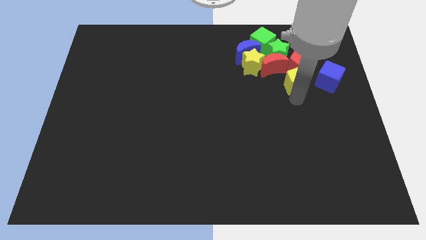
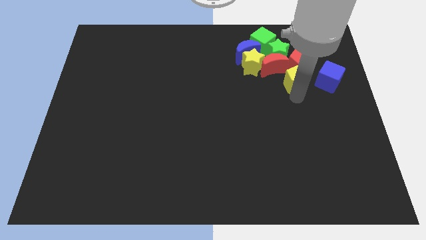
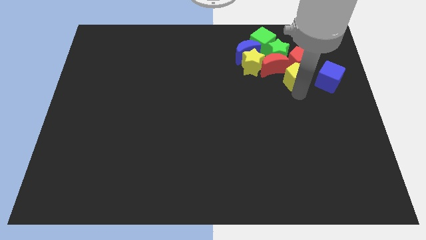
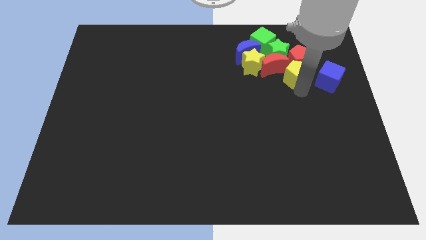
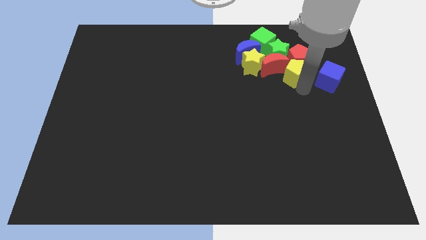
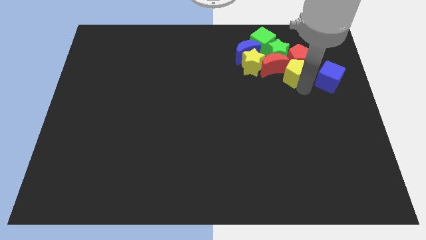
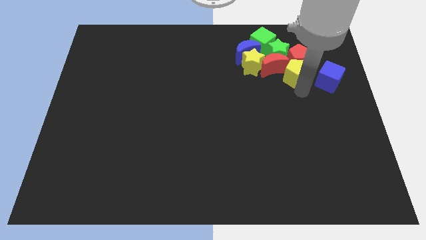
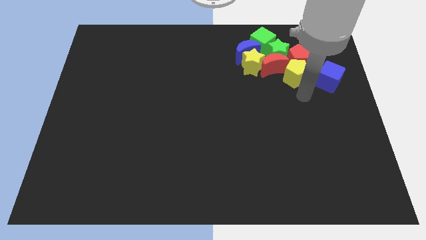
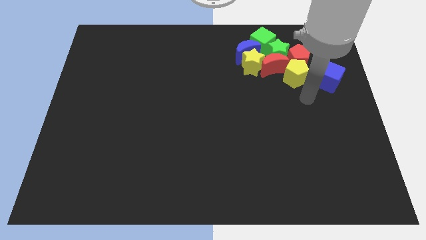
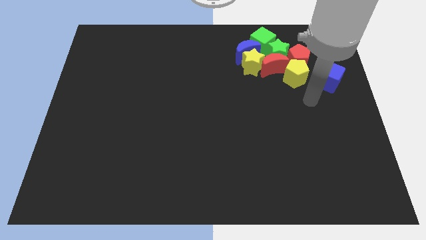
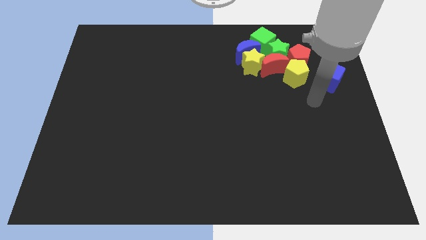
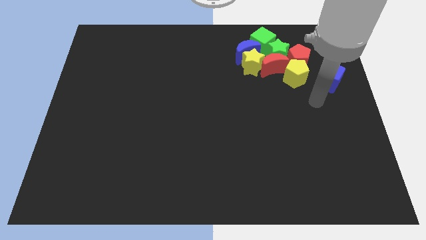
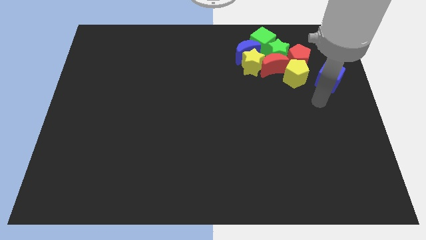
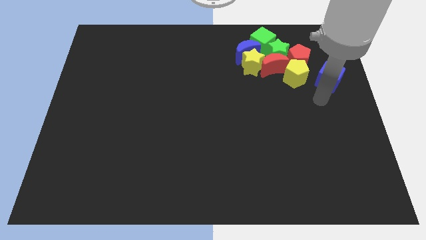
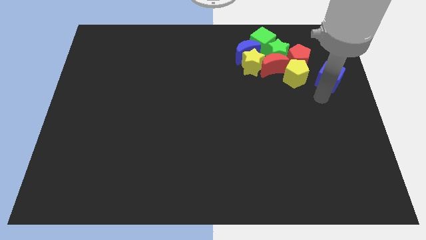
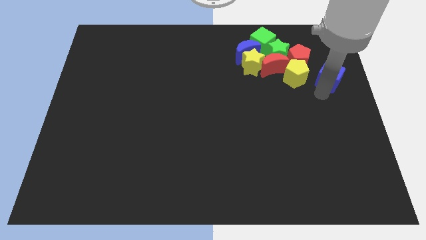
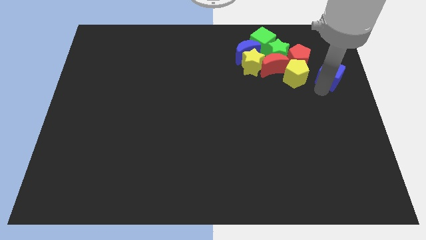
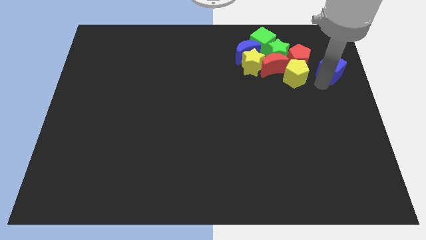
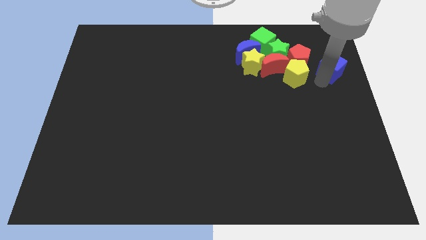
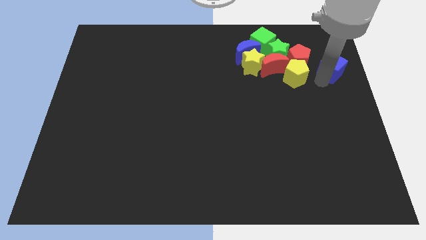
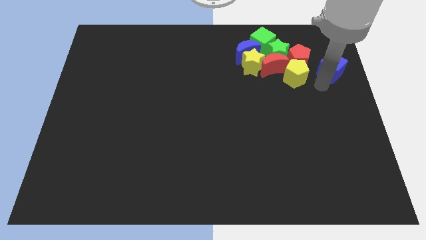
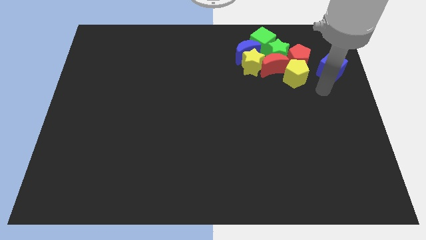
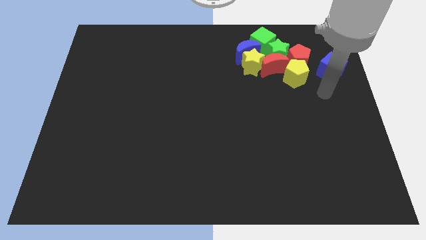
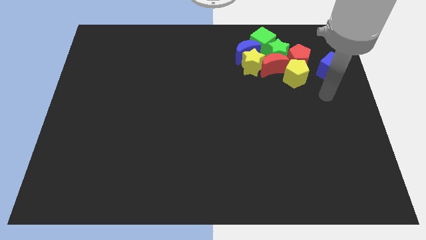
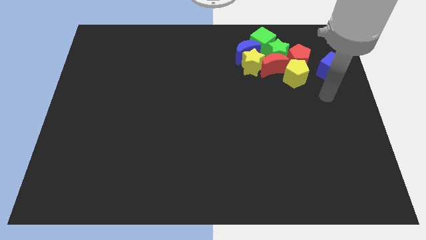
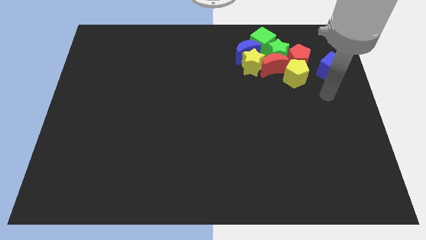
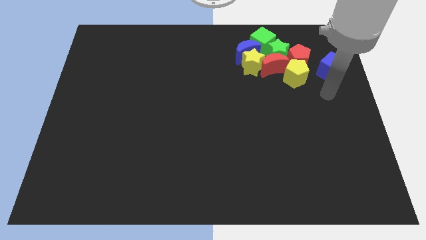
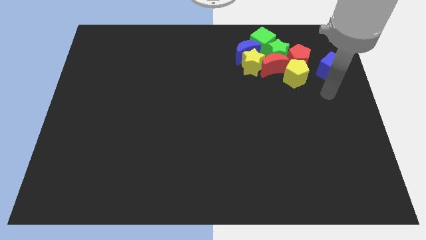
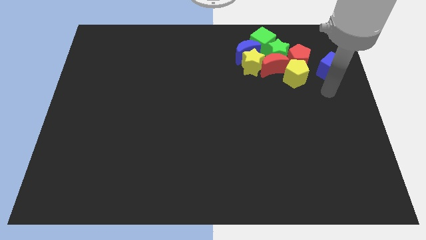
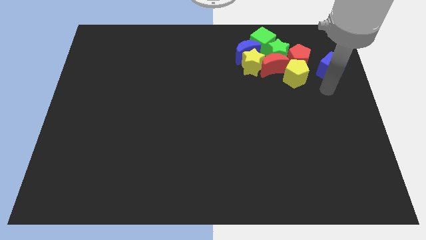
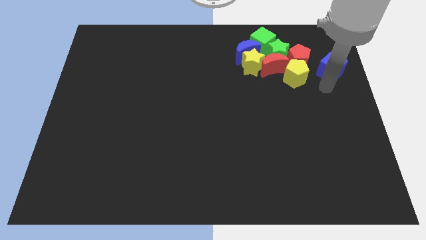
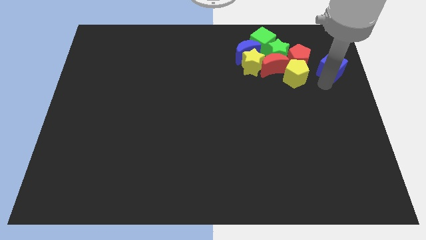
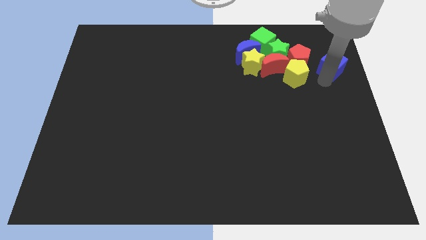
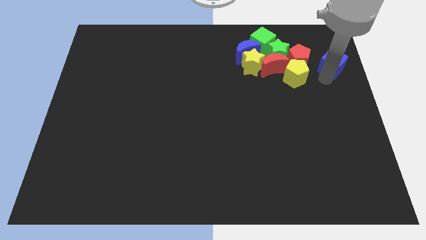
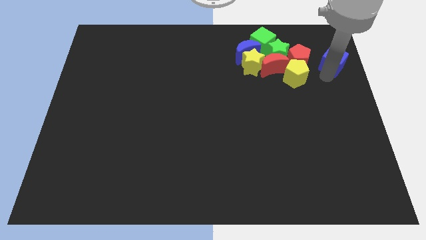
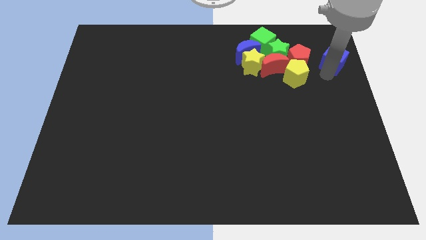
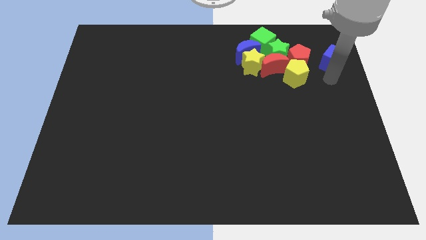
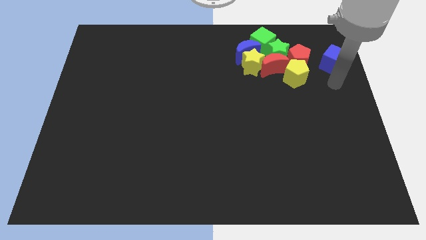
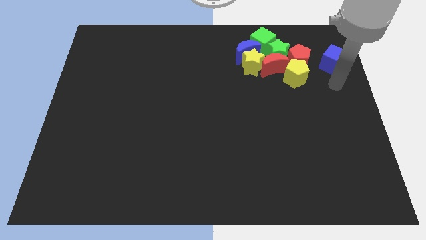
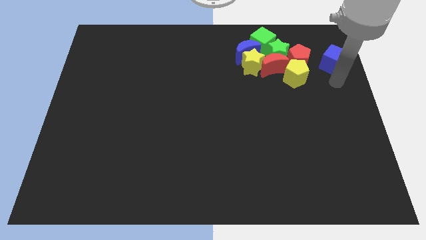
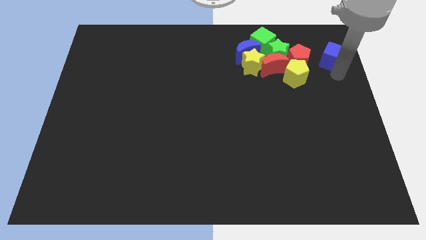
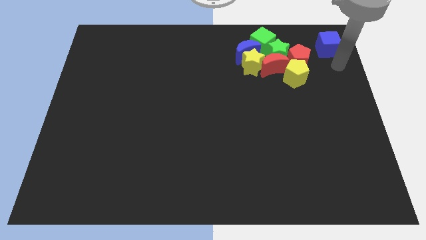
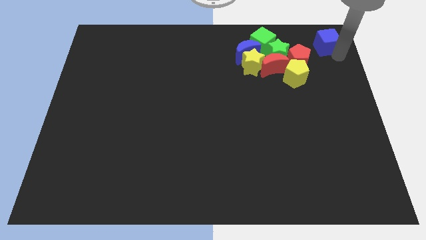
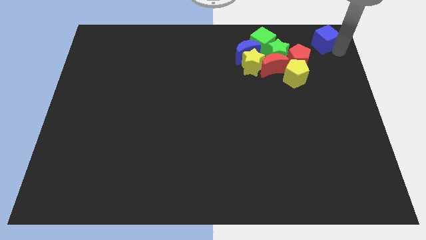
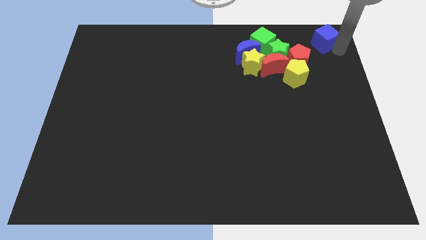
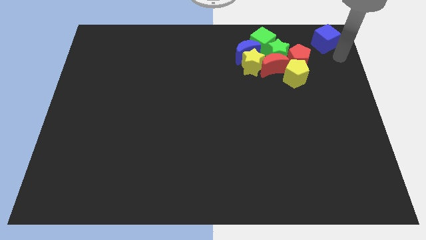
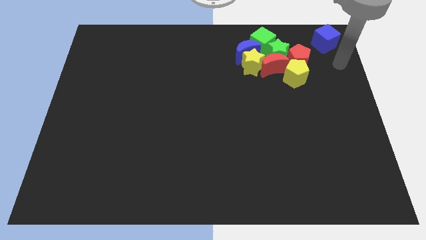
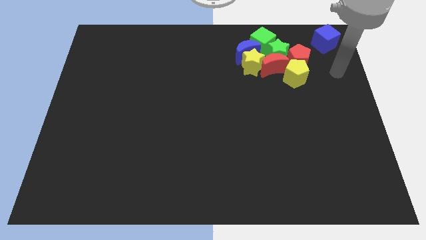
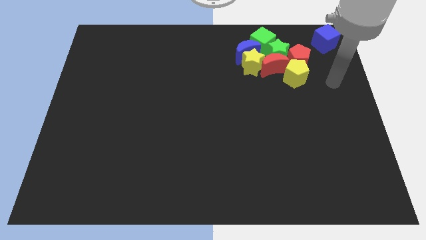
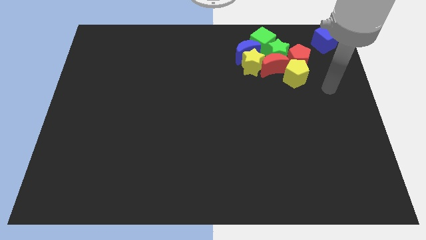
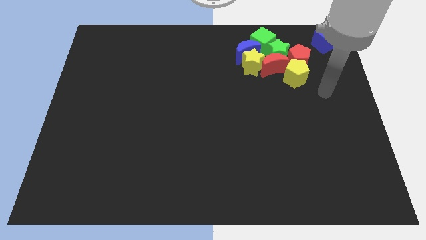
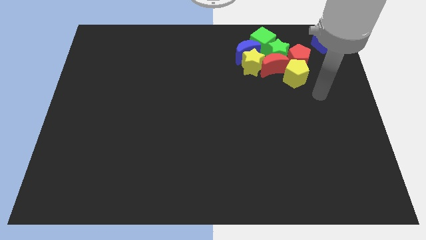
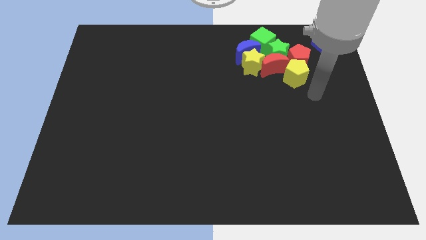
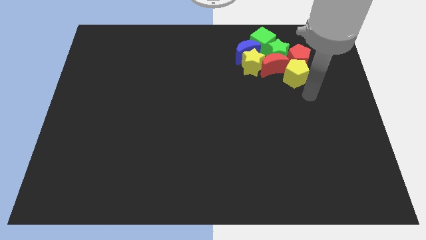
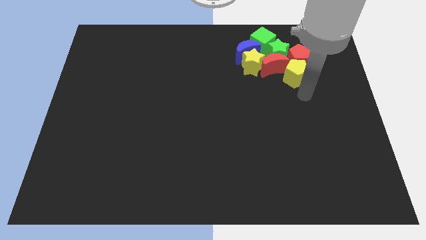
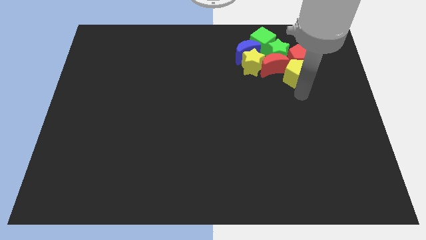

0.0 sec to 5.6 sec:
place the blue cube to the top right corner of the board

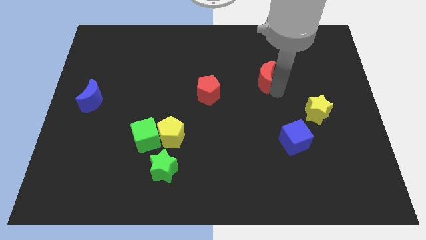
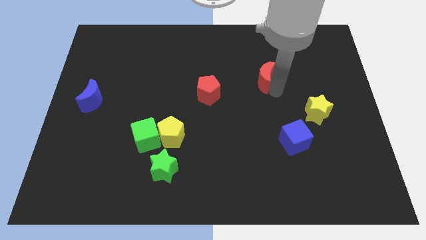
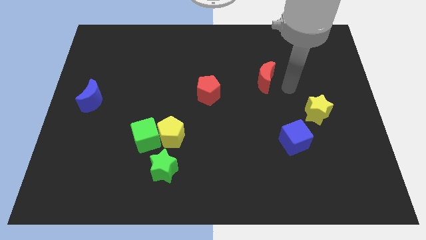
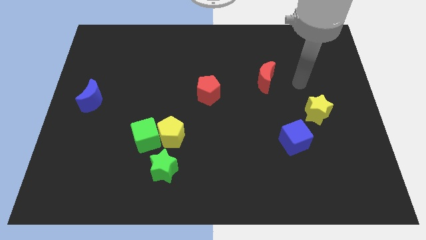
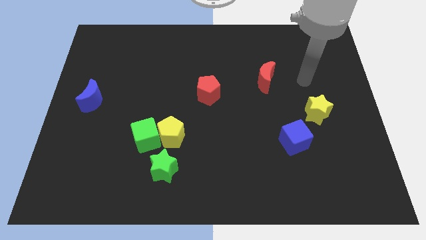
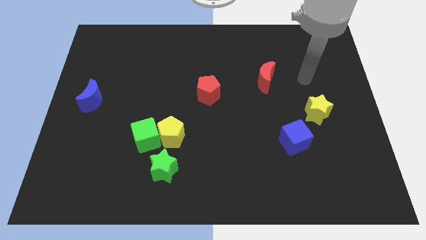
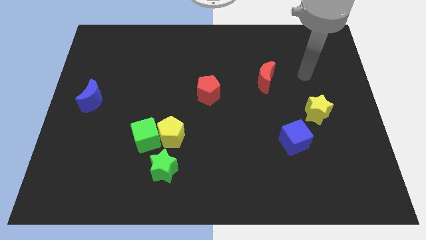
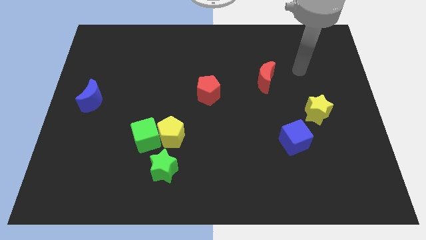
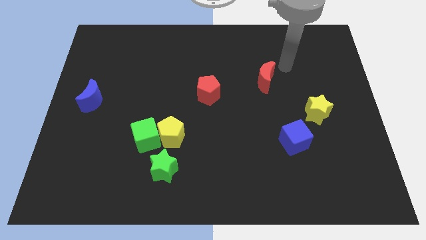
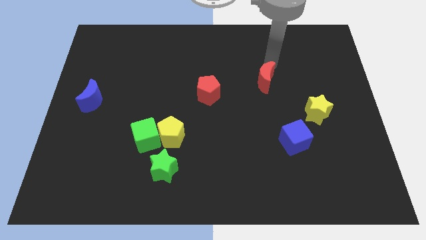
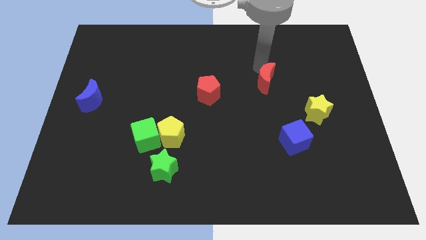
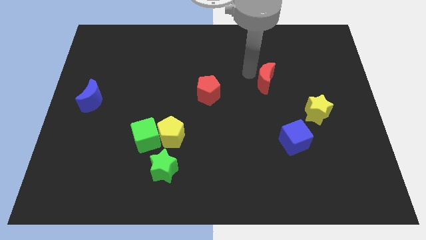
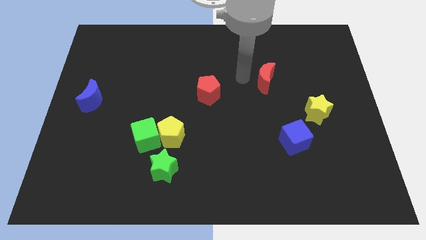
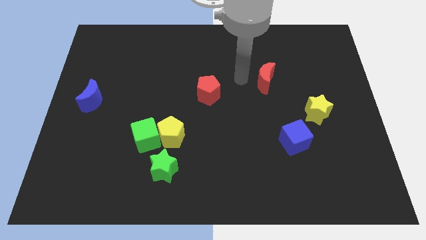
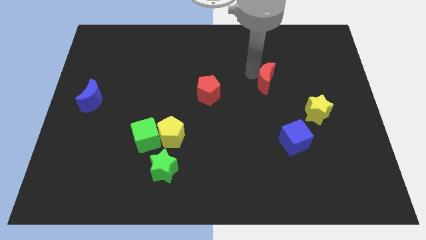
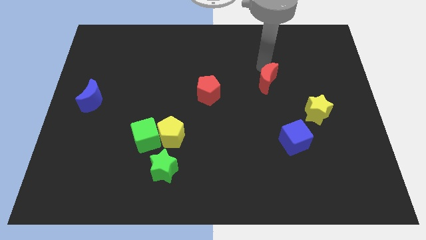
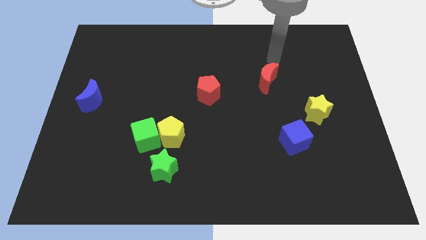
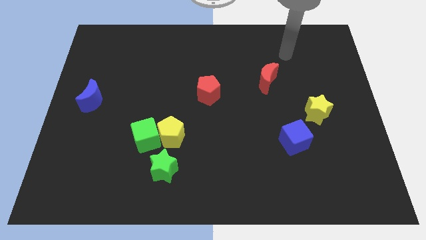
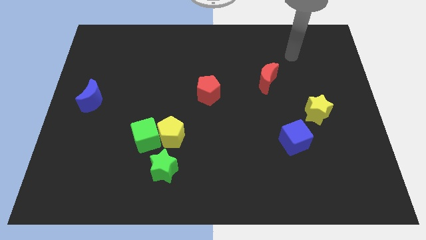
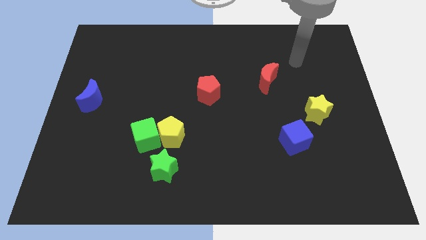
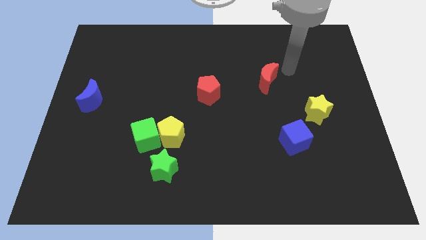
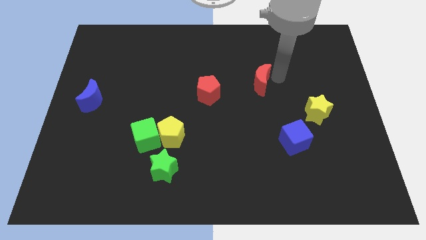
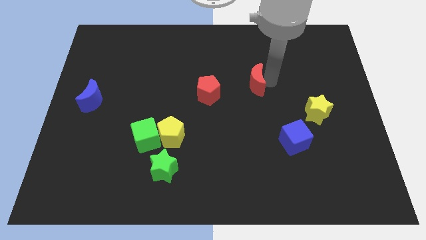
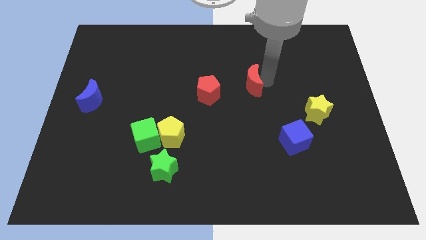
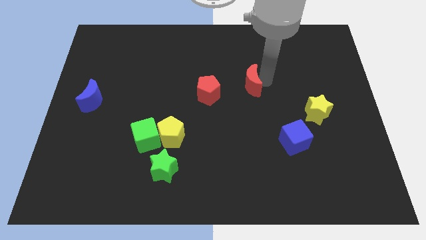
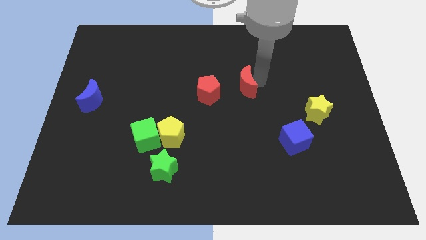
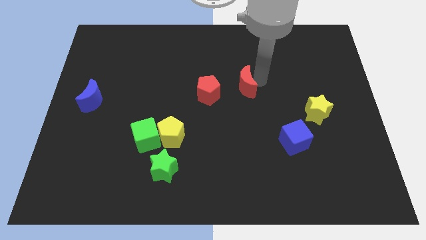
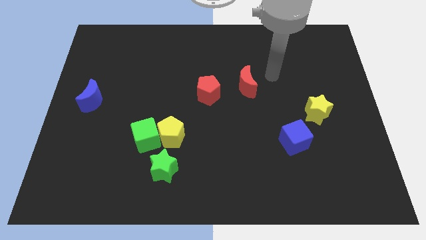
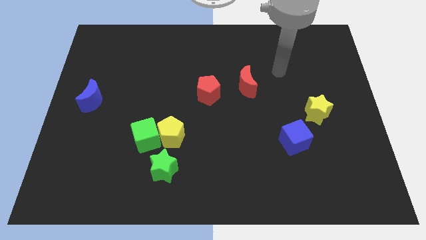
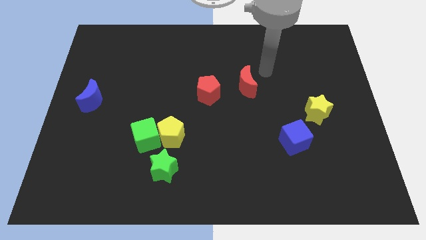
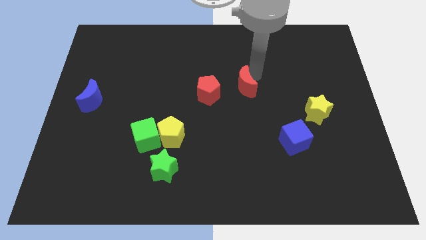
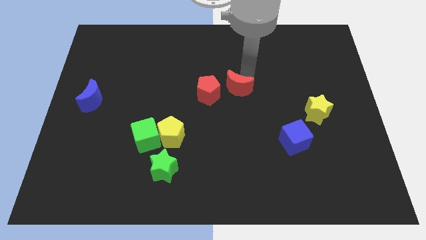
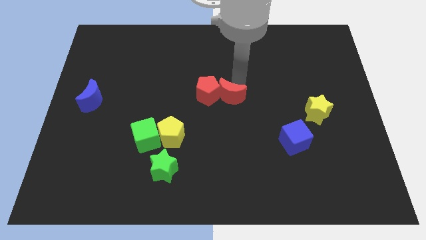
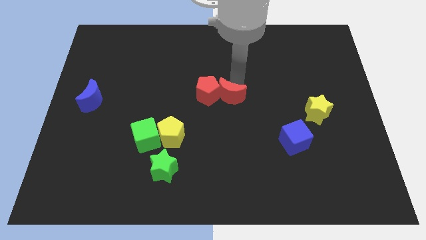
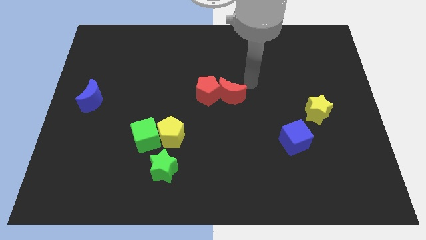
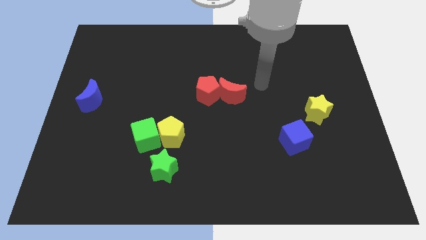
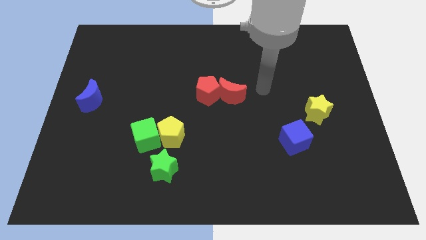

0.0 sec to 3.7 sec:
push red crescent into red pentagon
